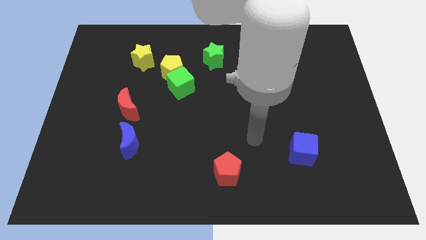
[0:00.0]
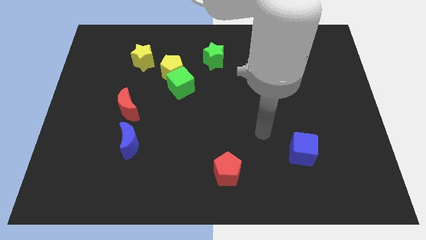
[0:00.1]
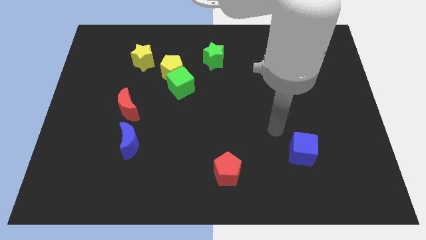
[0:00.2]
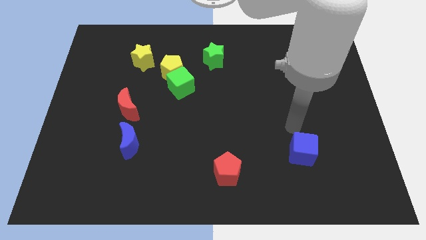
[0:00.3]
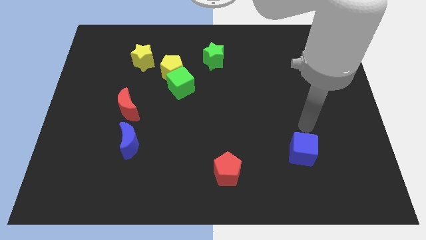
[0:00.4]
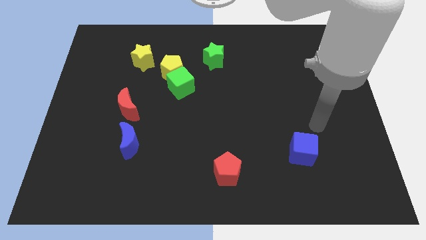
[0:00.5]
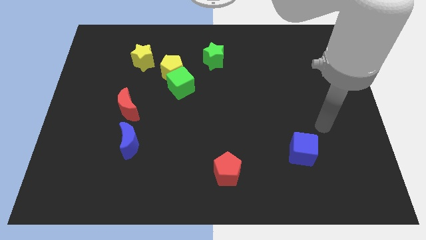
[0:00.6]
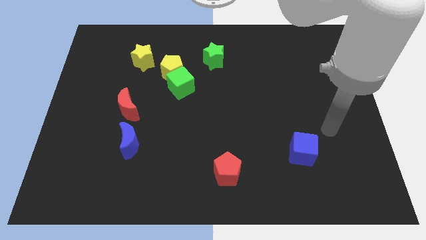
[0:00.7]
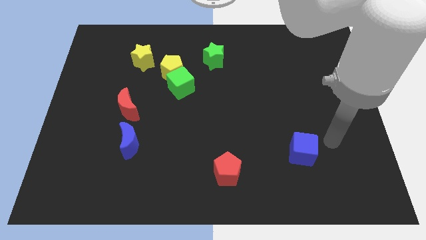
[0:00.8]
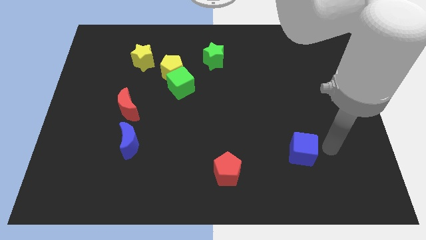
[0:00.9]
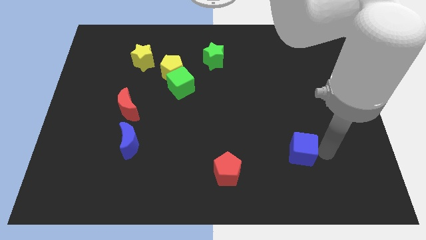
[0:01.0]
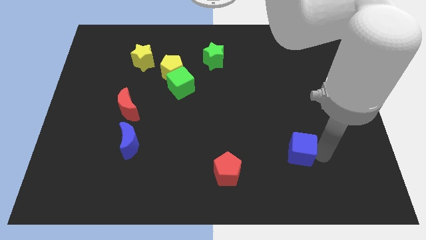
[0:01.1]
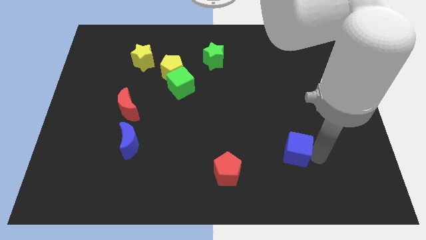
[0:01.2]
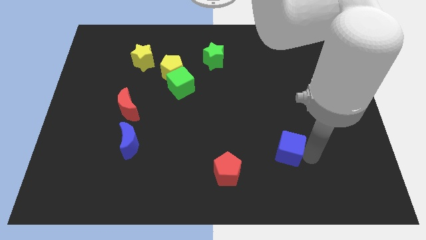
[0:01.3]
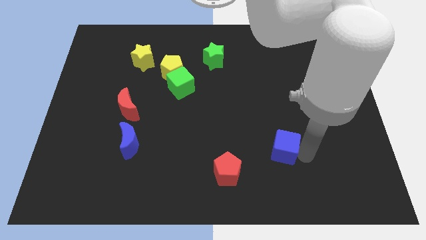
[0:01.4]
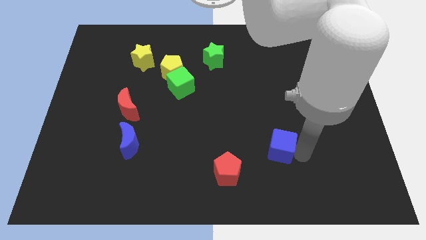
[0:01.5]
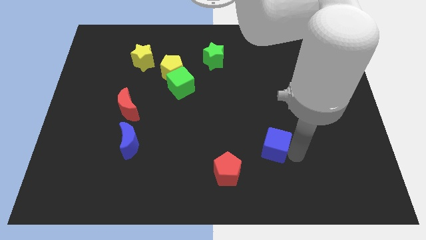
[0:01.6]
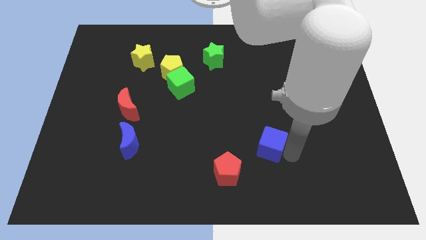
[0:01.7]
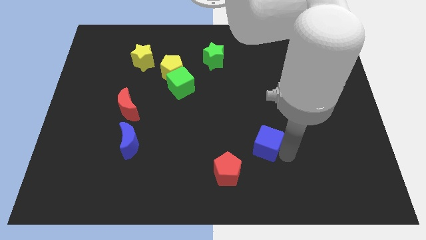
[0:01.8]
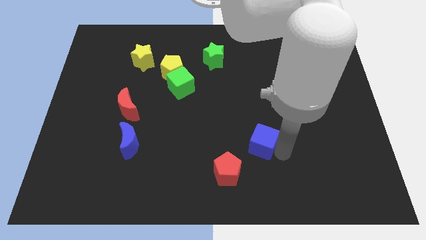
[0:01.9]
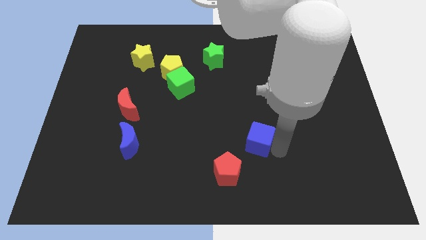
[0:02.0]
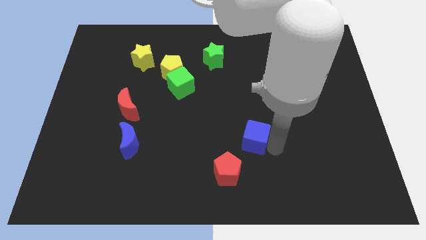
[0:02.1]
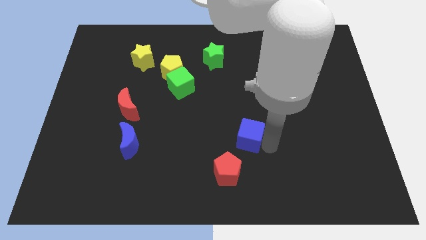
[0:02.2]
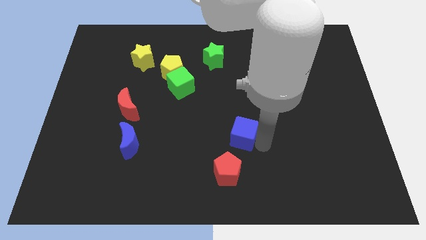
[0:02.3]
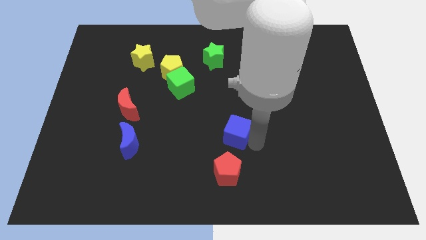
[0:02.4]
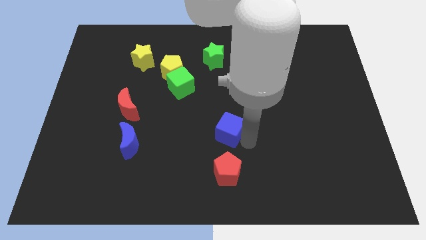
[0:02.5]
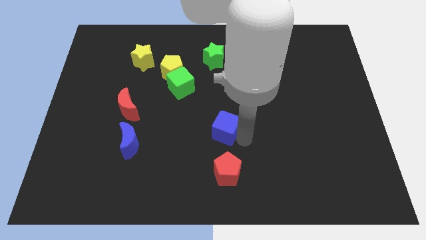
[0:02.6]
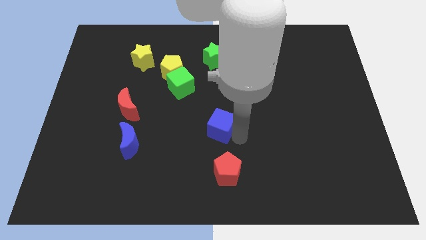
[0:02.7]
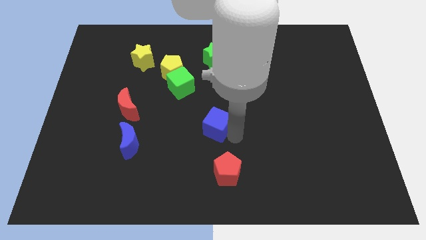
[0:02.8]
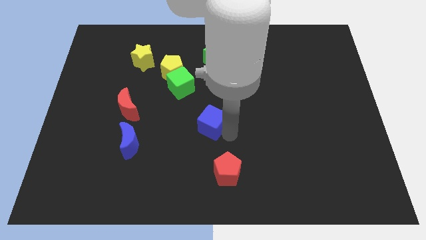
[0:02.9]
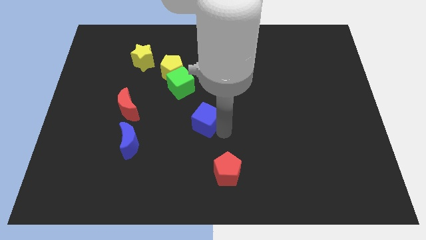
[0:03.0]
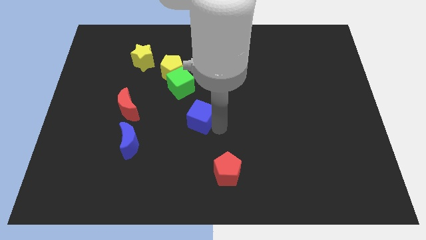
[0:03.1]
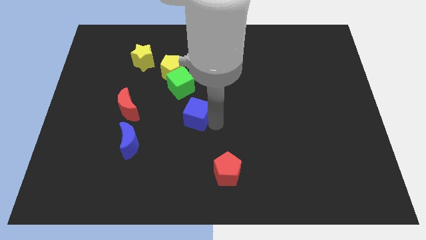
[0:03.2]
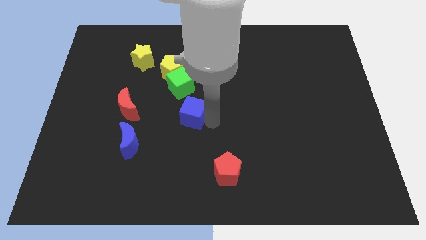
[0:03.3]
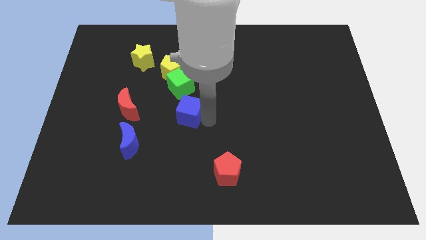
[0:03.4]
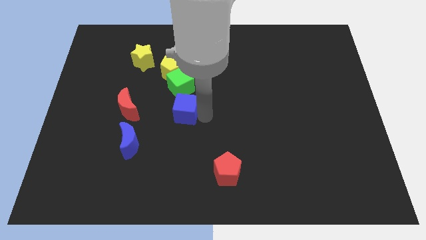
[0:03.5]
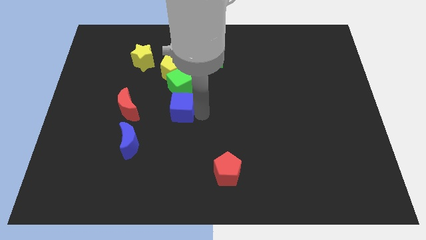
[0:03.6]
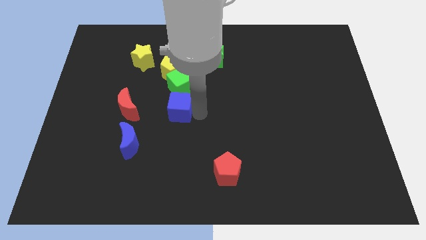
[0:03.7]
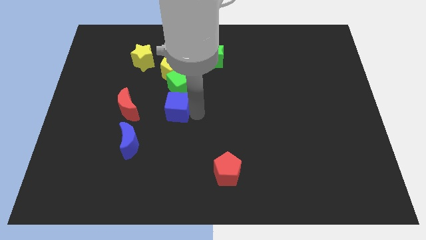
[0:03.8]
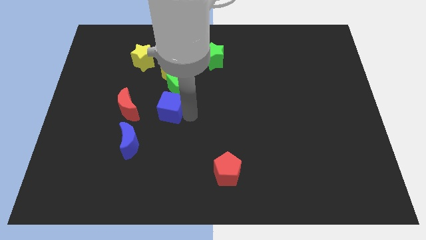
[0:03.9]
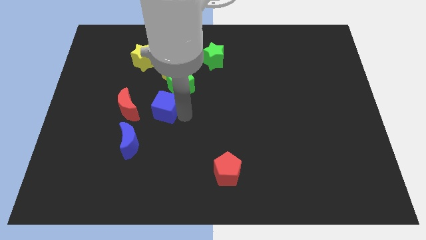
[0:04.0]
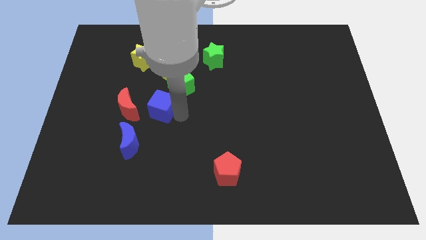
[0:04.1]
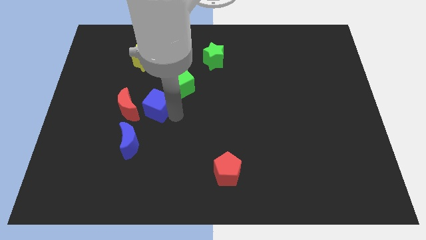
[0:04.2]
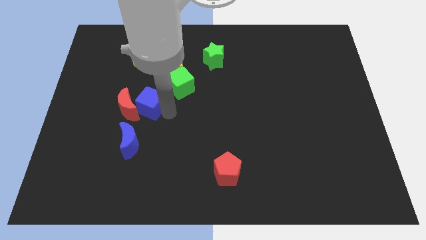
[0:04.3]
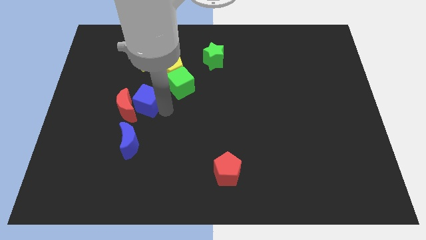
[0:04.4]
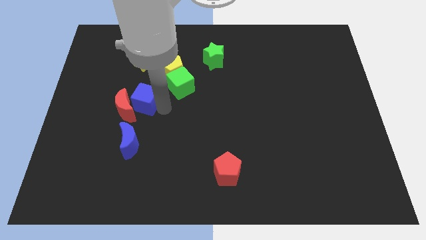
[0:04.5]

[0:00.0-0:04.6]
push the blue cube next to the red moon

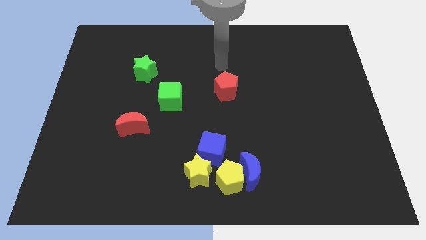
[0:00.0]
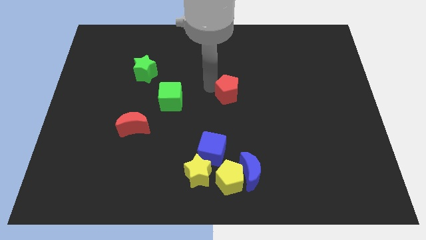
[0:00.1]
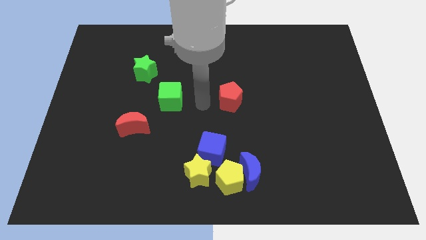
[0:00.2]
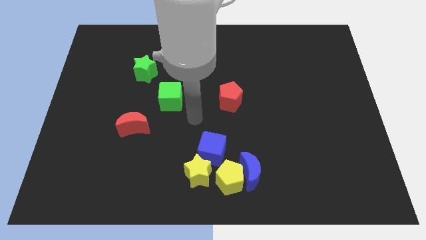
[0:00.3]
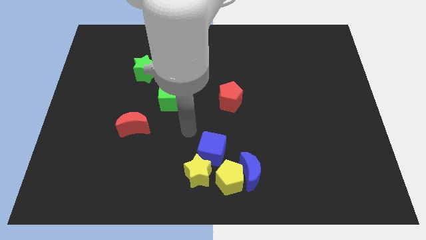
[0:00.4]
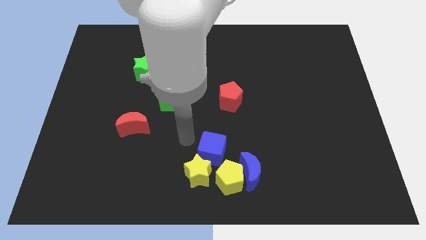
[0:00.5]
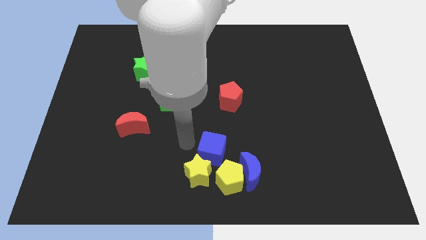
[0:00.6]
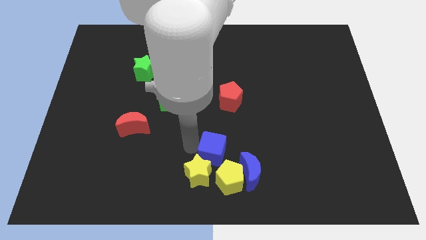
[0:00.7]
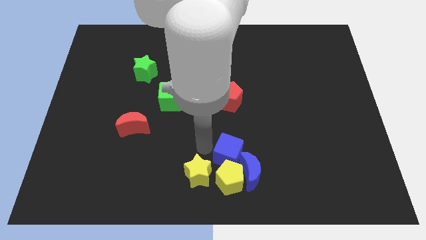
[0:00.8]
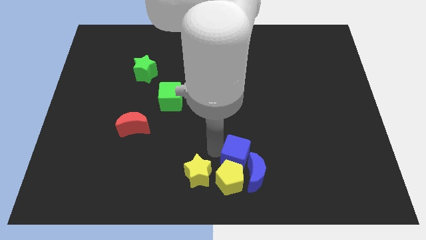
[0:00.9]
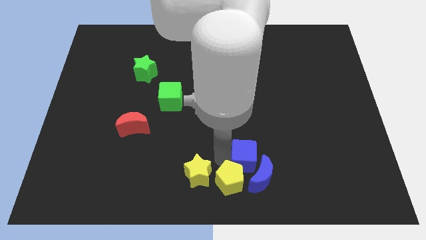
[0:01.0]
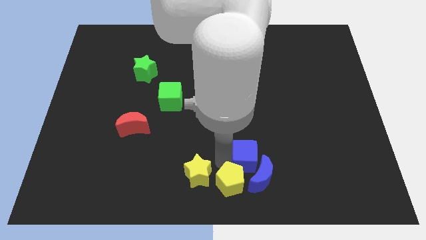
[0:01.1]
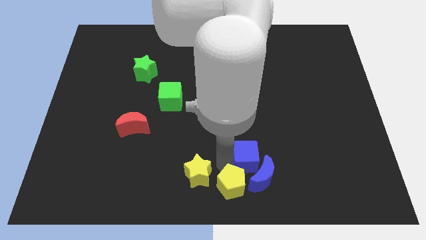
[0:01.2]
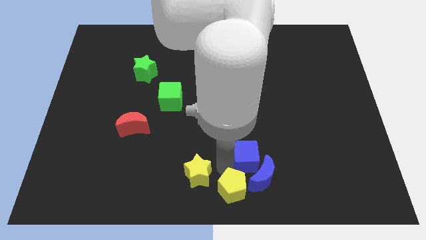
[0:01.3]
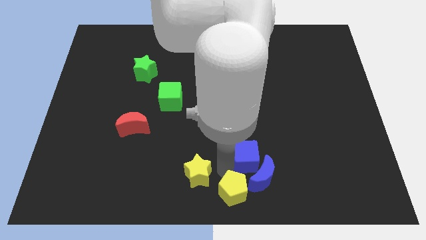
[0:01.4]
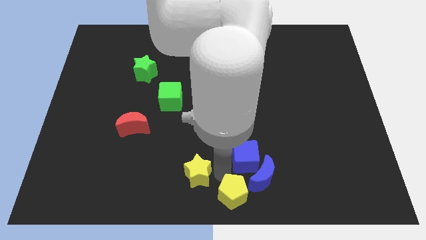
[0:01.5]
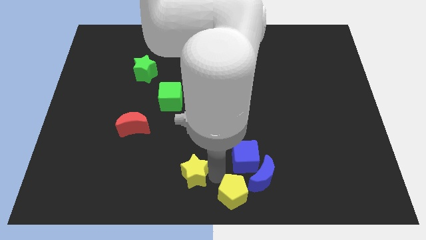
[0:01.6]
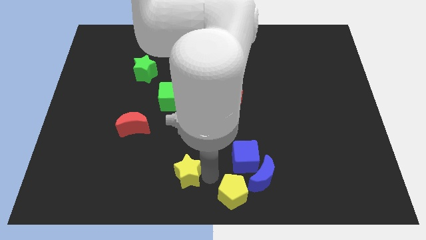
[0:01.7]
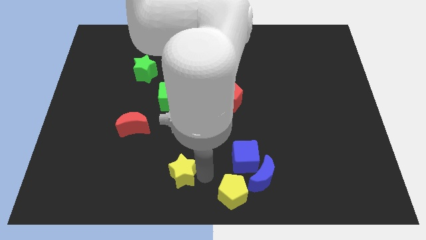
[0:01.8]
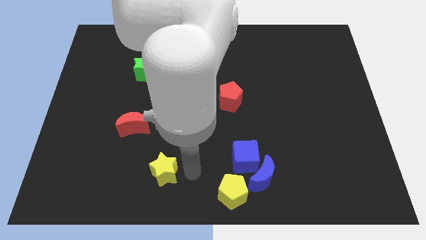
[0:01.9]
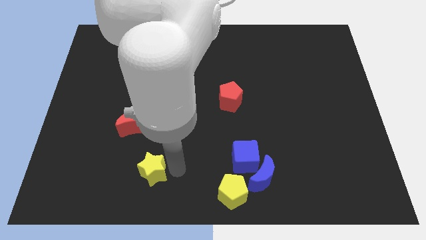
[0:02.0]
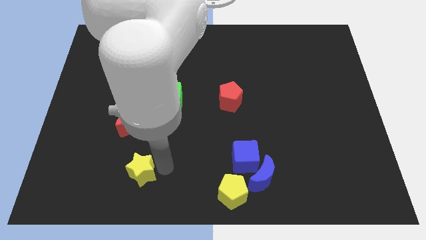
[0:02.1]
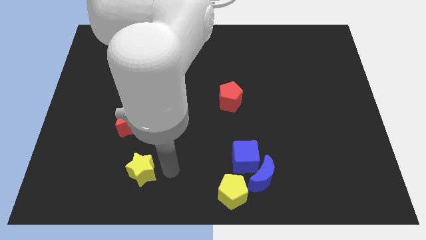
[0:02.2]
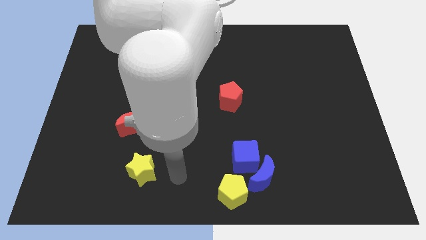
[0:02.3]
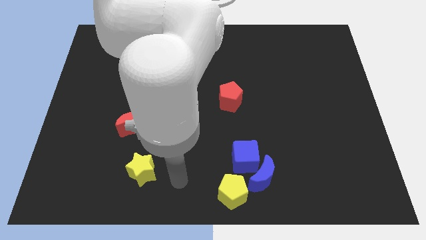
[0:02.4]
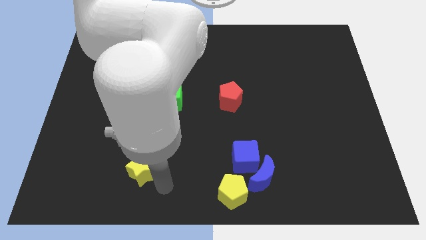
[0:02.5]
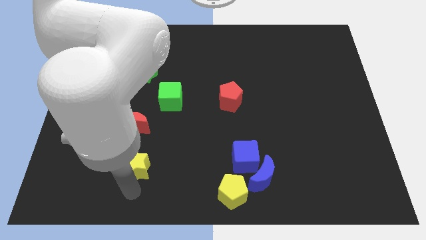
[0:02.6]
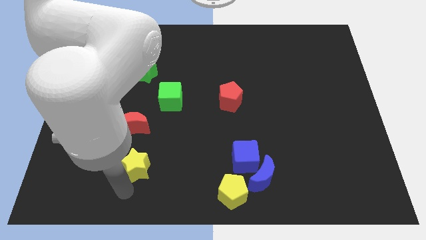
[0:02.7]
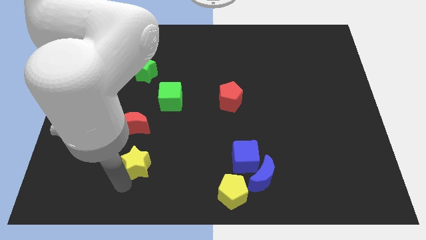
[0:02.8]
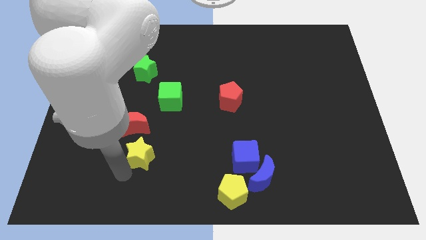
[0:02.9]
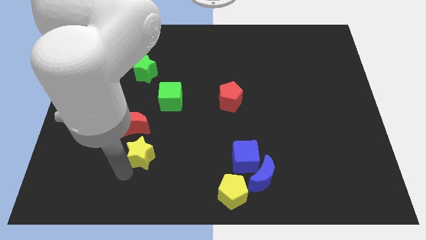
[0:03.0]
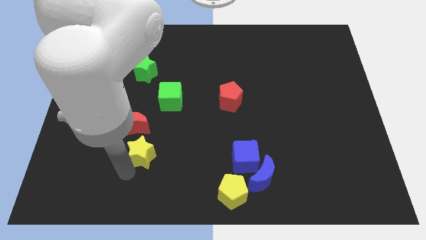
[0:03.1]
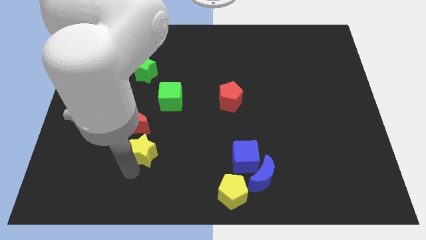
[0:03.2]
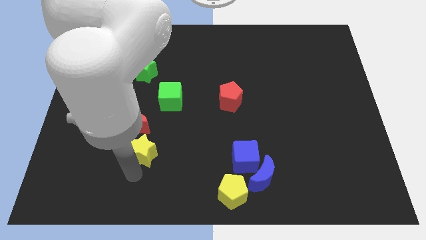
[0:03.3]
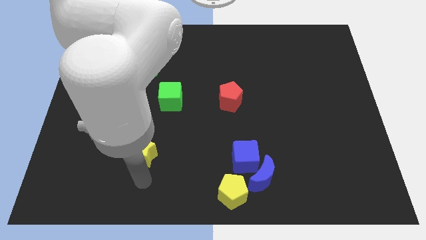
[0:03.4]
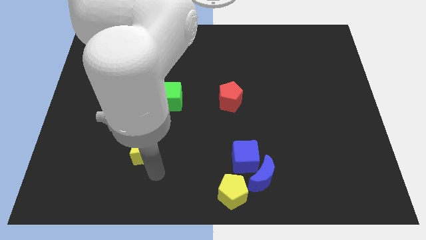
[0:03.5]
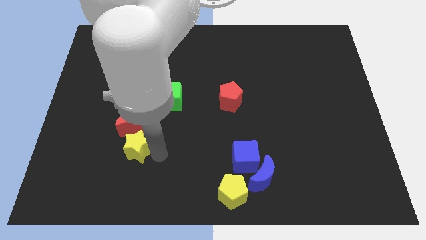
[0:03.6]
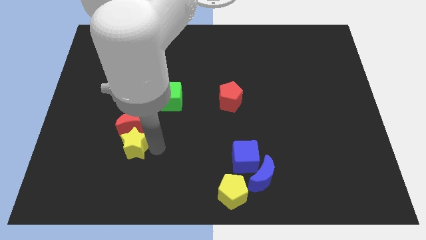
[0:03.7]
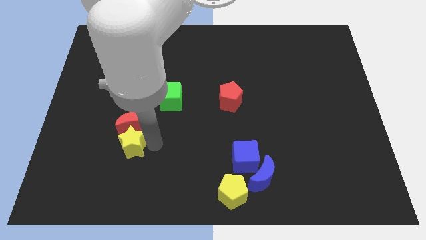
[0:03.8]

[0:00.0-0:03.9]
move the yellow star next to the red moon
